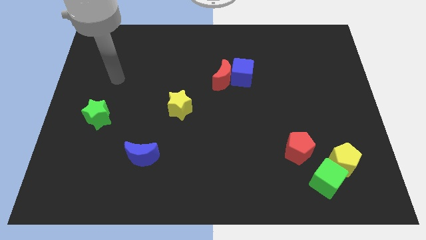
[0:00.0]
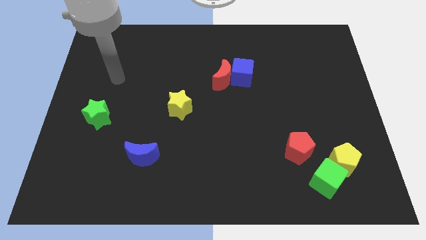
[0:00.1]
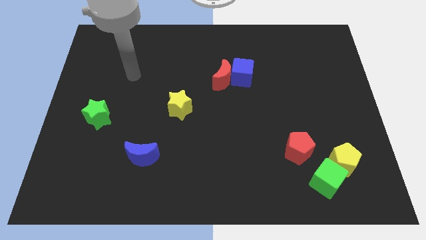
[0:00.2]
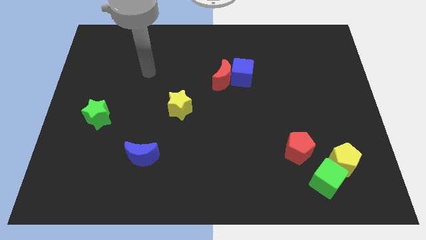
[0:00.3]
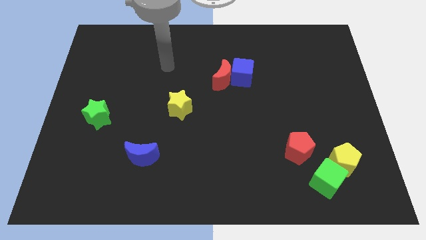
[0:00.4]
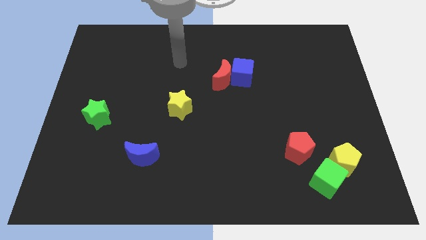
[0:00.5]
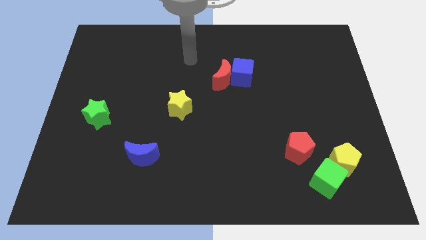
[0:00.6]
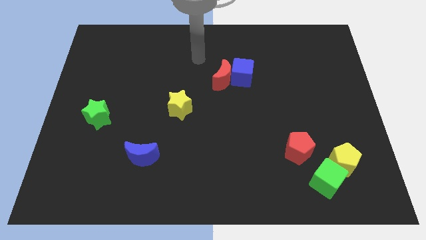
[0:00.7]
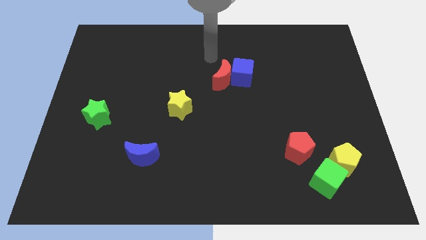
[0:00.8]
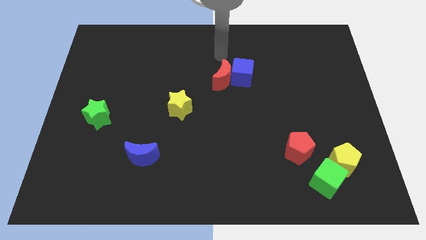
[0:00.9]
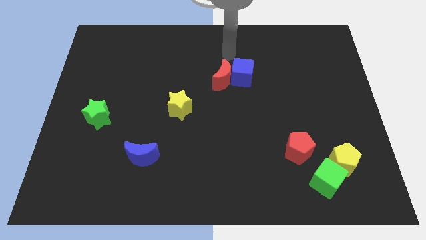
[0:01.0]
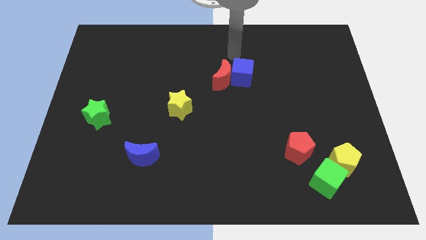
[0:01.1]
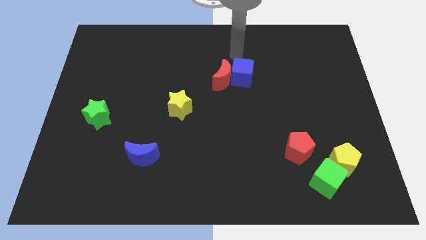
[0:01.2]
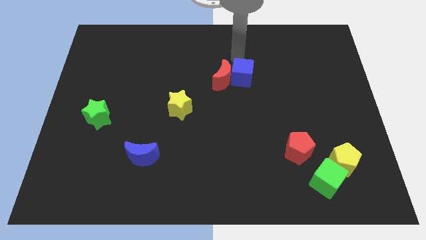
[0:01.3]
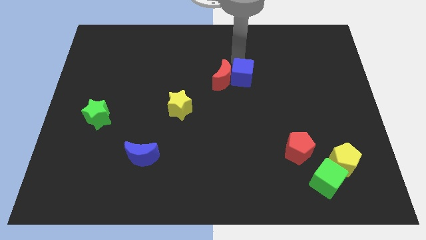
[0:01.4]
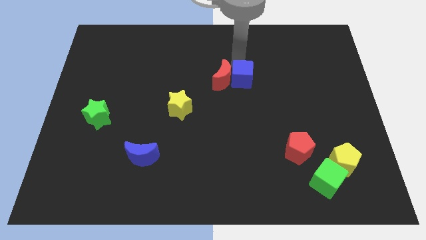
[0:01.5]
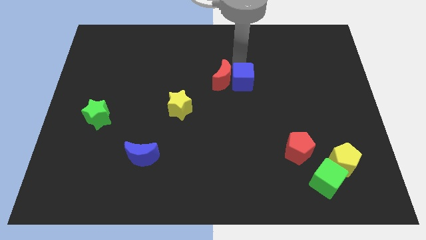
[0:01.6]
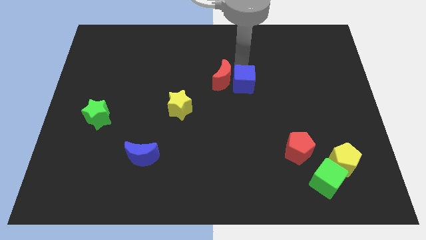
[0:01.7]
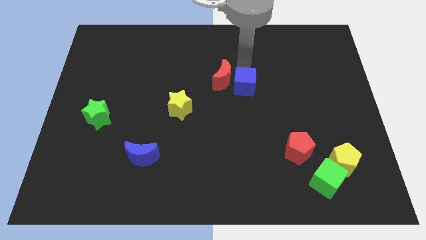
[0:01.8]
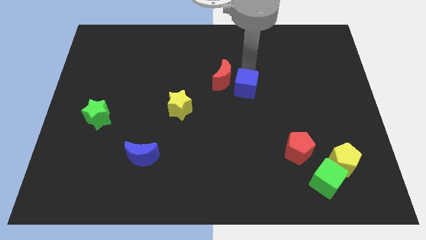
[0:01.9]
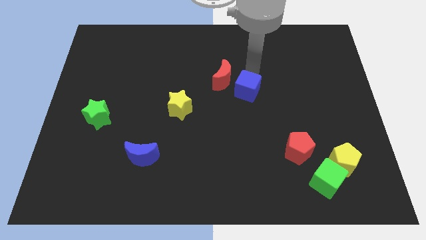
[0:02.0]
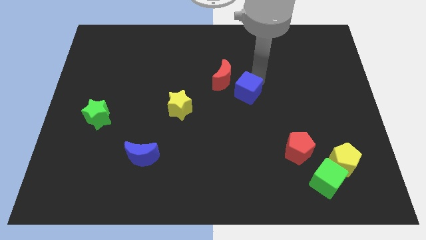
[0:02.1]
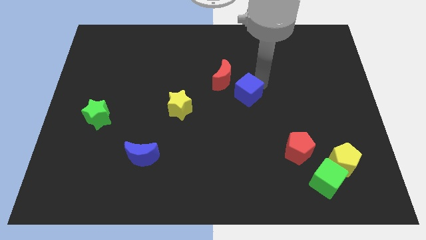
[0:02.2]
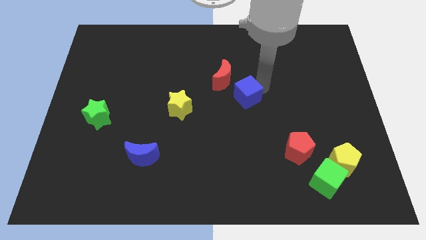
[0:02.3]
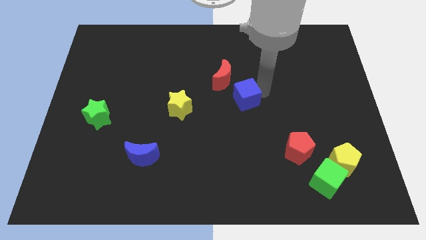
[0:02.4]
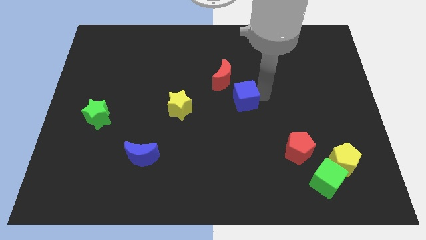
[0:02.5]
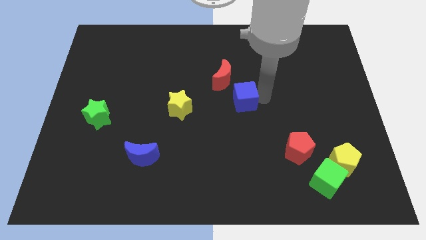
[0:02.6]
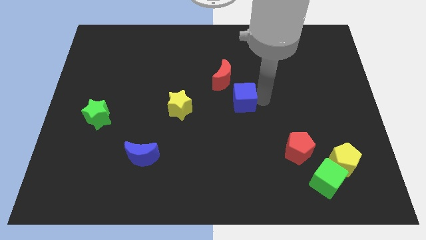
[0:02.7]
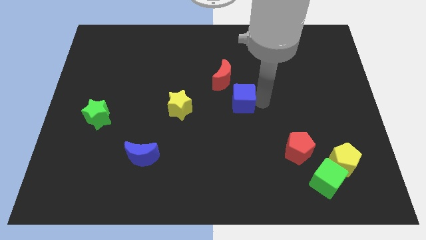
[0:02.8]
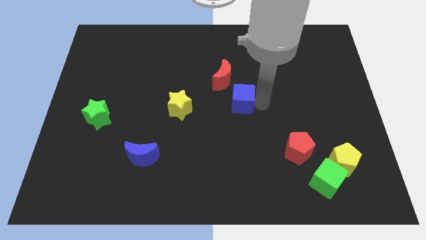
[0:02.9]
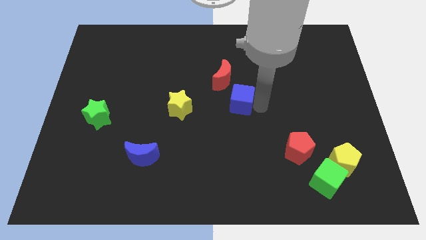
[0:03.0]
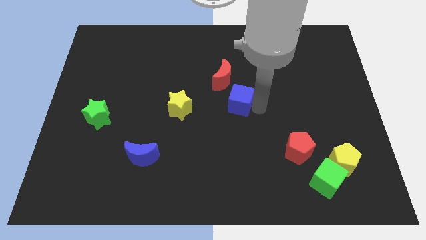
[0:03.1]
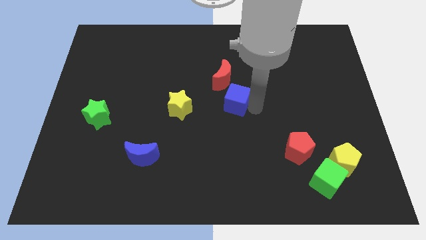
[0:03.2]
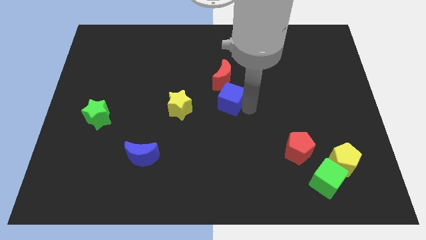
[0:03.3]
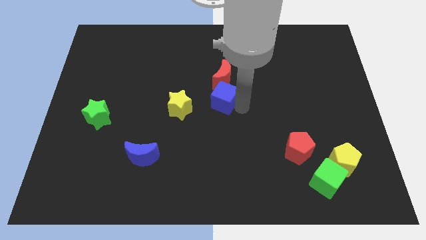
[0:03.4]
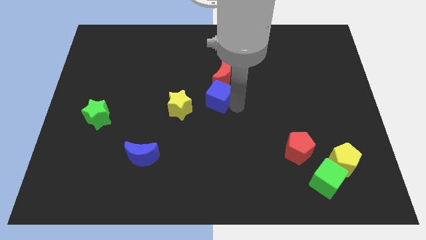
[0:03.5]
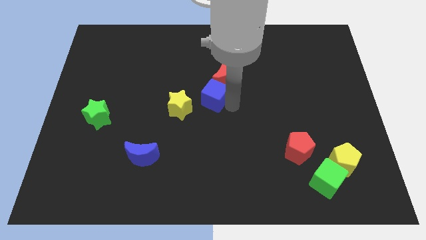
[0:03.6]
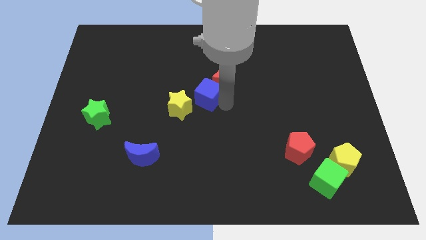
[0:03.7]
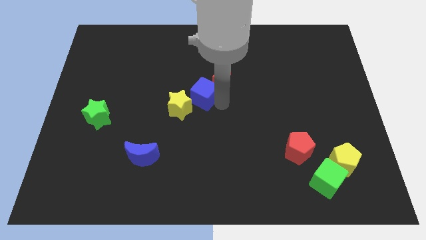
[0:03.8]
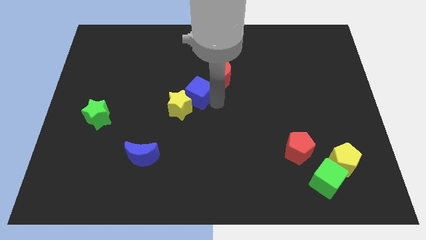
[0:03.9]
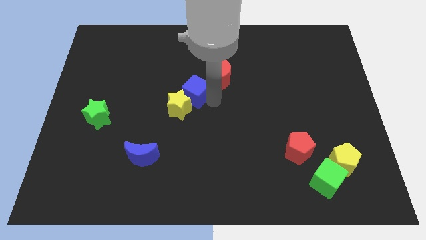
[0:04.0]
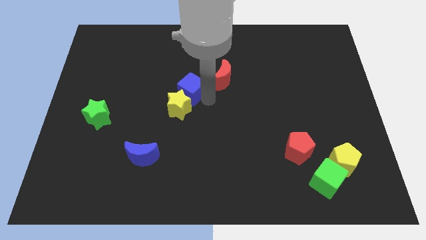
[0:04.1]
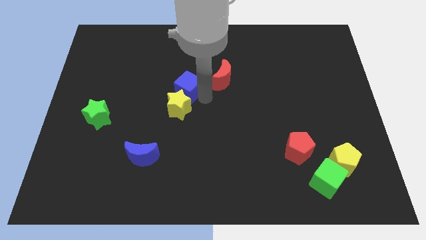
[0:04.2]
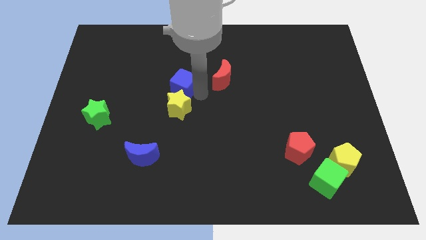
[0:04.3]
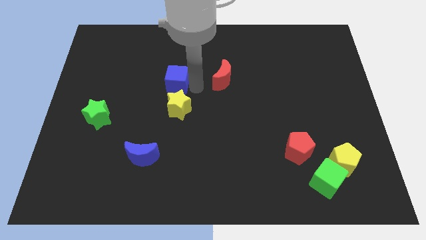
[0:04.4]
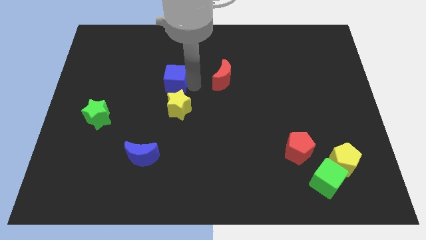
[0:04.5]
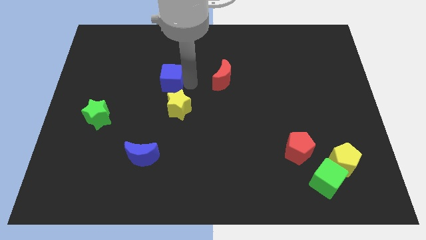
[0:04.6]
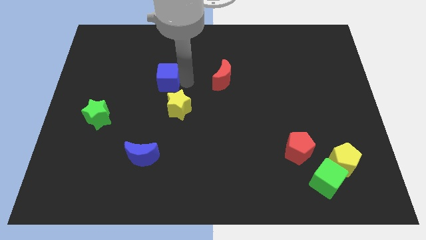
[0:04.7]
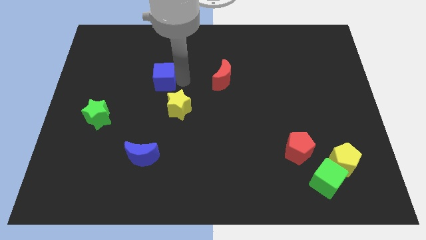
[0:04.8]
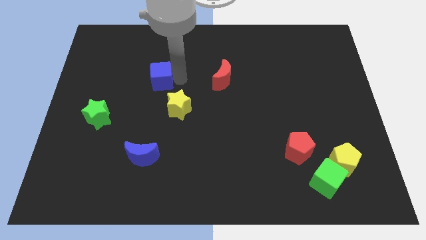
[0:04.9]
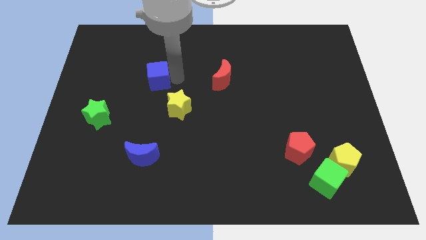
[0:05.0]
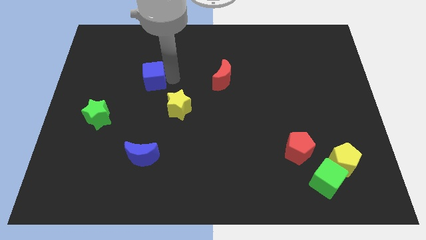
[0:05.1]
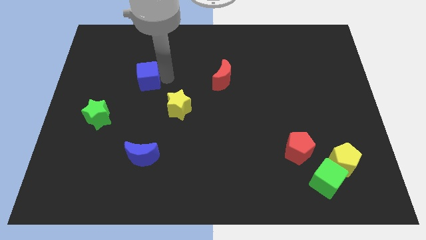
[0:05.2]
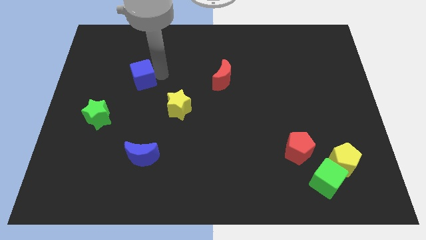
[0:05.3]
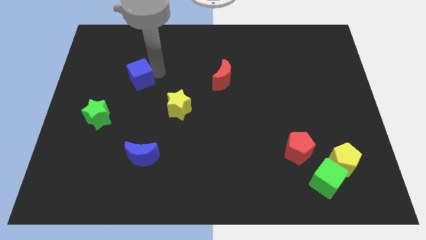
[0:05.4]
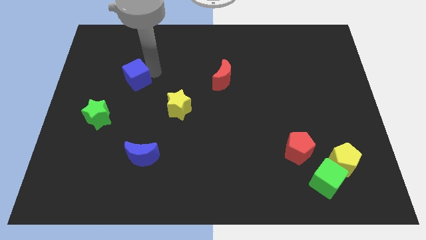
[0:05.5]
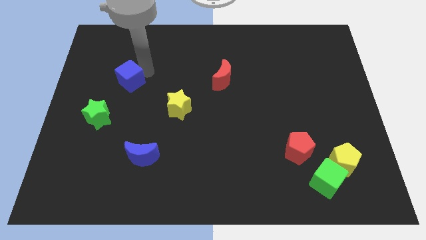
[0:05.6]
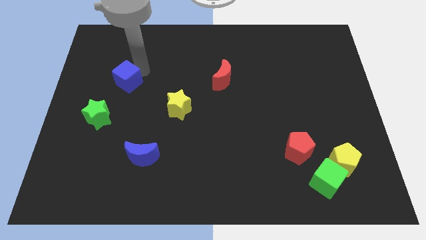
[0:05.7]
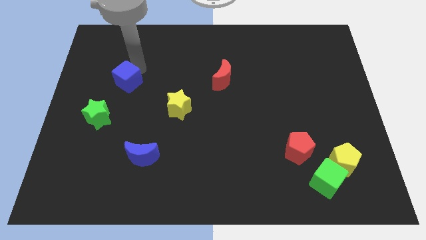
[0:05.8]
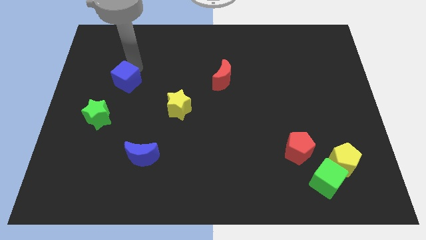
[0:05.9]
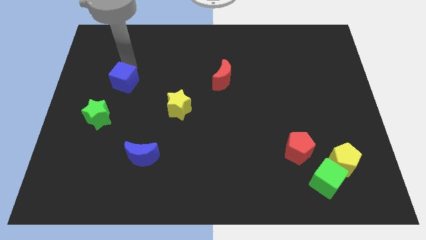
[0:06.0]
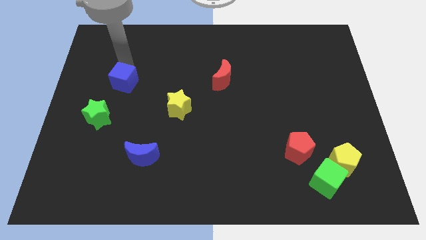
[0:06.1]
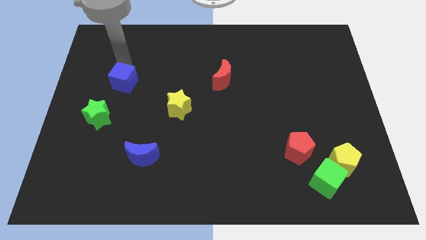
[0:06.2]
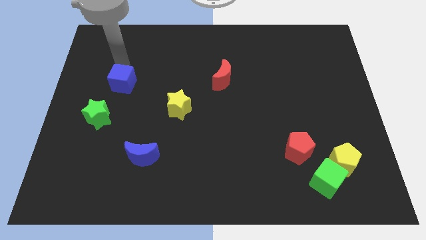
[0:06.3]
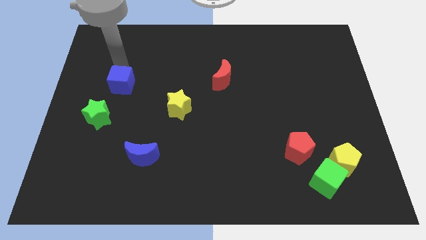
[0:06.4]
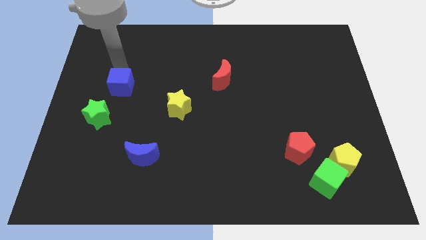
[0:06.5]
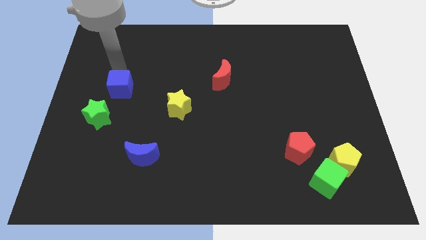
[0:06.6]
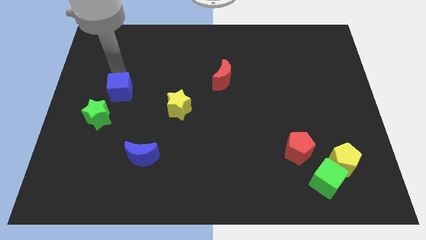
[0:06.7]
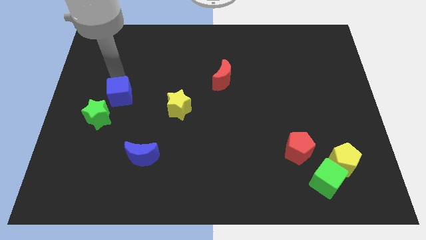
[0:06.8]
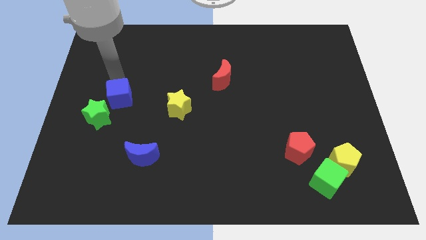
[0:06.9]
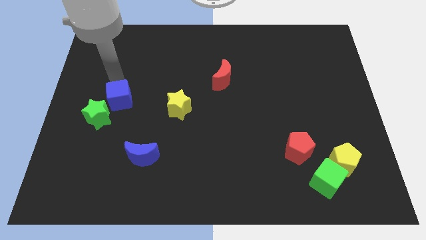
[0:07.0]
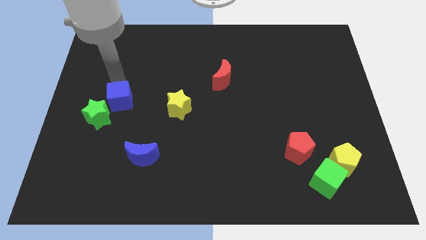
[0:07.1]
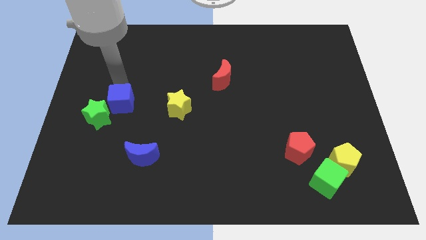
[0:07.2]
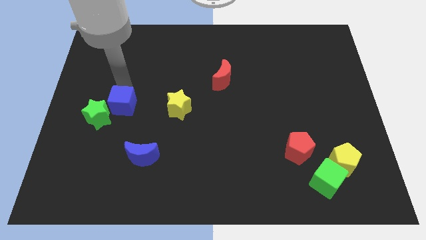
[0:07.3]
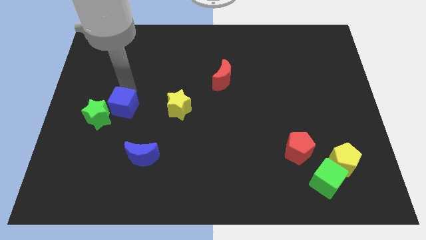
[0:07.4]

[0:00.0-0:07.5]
slide the blue cube to the green star

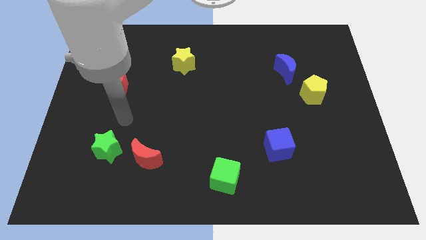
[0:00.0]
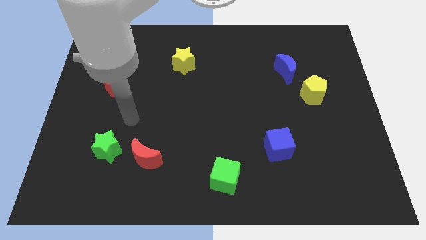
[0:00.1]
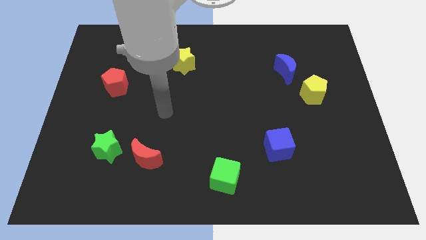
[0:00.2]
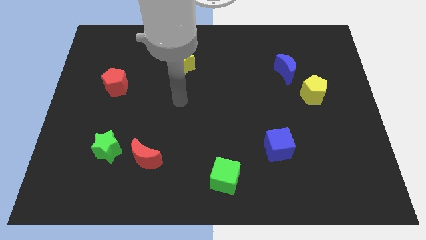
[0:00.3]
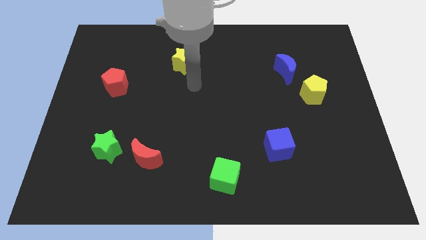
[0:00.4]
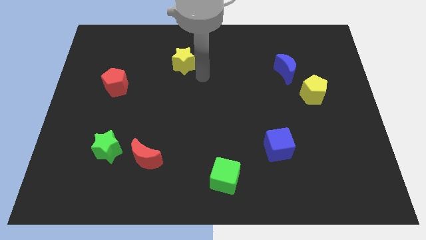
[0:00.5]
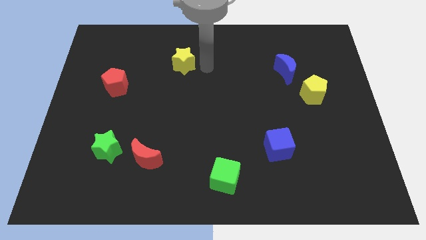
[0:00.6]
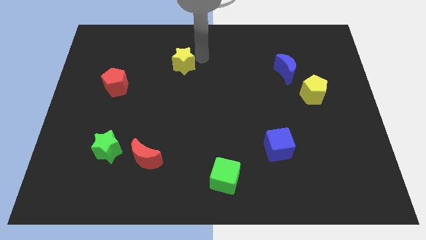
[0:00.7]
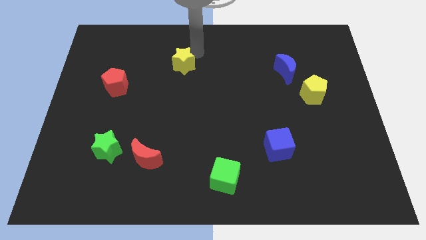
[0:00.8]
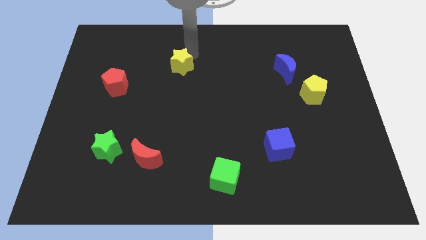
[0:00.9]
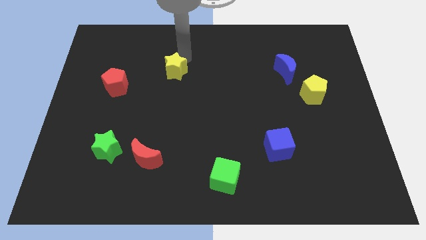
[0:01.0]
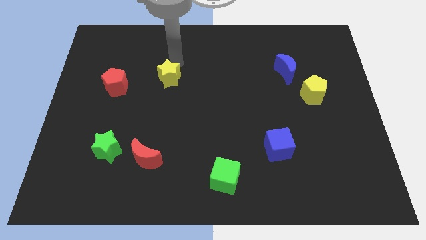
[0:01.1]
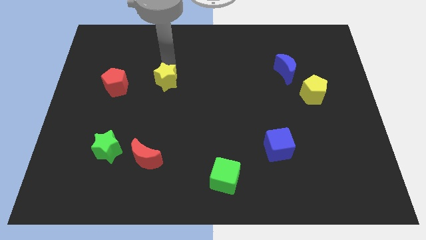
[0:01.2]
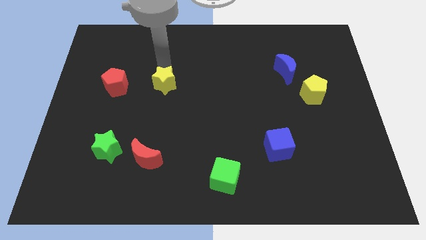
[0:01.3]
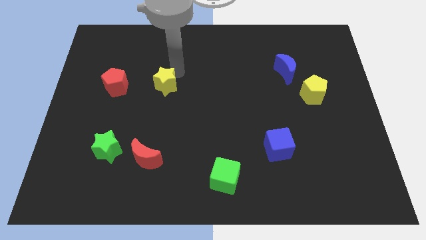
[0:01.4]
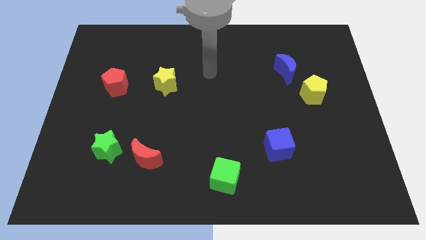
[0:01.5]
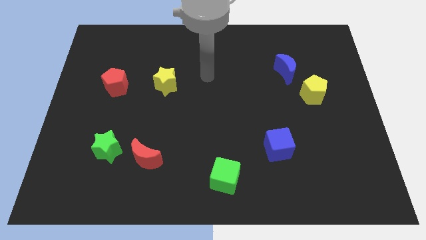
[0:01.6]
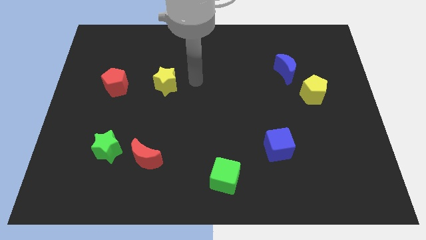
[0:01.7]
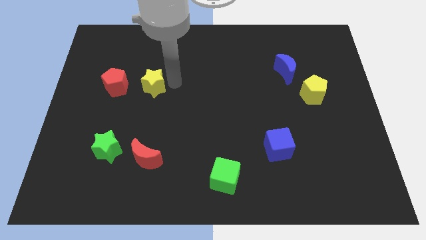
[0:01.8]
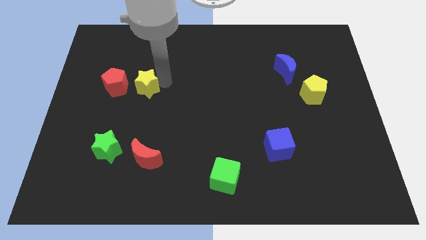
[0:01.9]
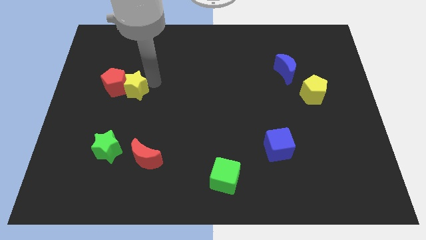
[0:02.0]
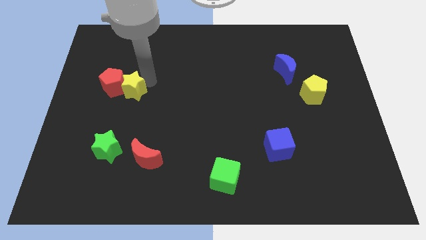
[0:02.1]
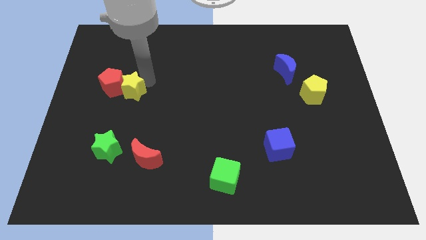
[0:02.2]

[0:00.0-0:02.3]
slide the yellow star towards the red pentagon
